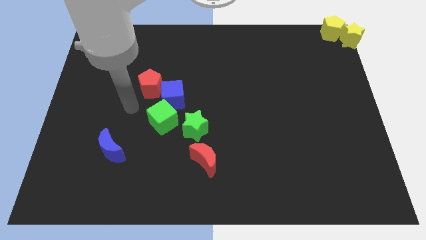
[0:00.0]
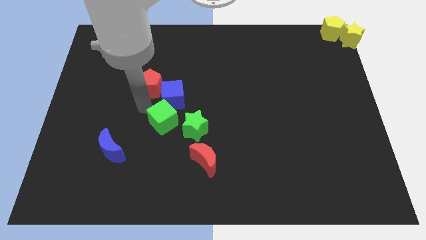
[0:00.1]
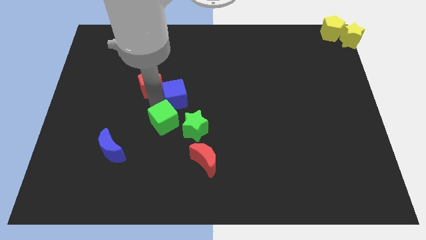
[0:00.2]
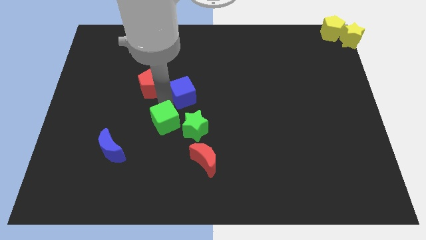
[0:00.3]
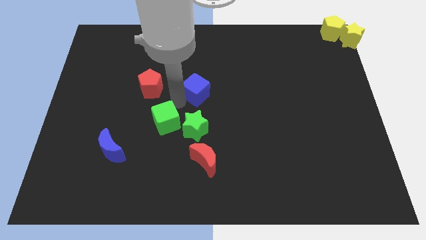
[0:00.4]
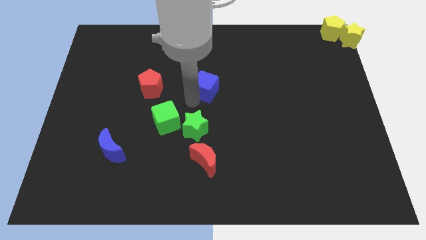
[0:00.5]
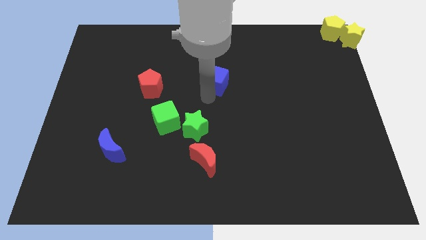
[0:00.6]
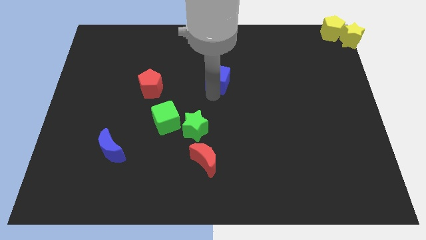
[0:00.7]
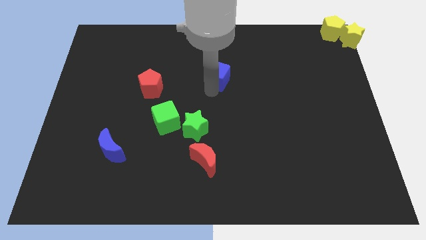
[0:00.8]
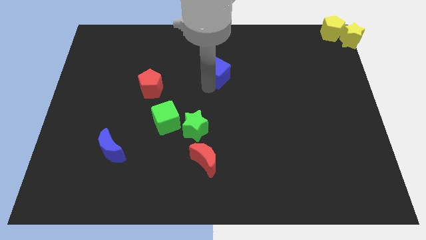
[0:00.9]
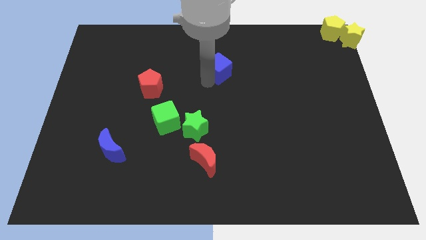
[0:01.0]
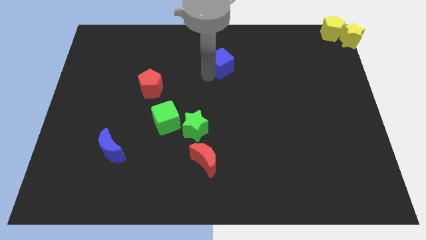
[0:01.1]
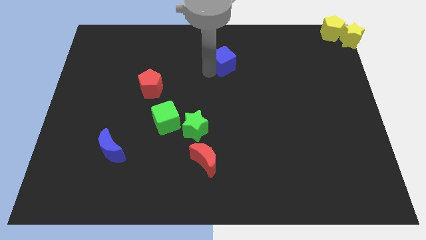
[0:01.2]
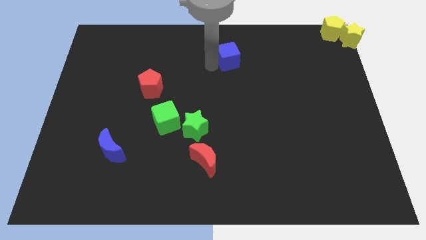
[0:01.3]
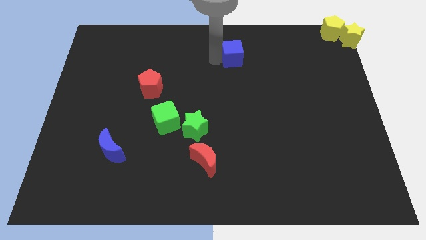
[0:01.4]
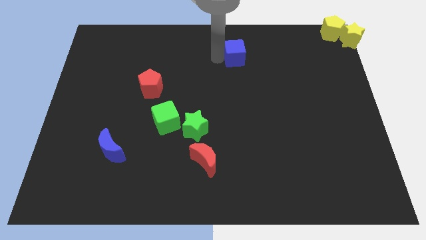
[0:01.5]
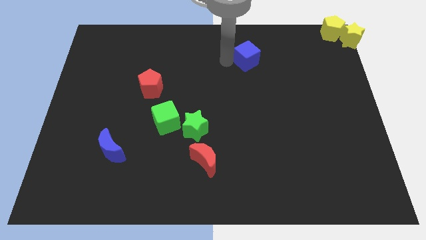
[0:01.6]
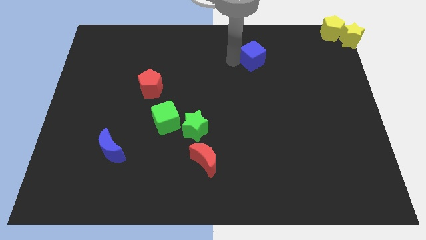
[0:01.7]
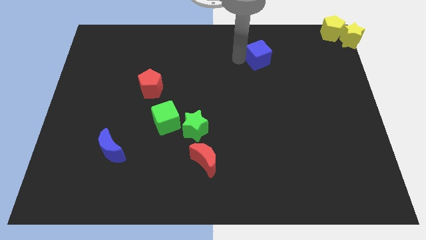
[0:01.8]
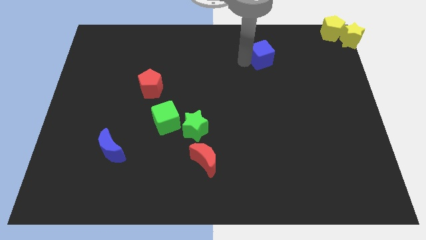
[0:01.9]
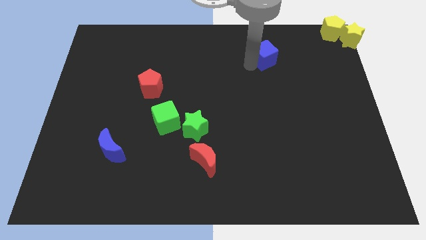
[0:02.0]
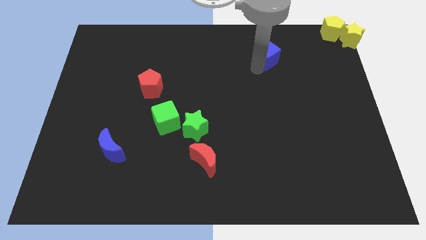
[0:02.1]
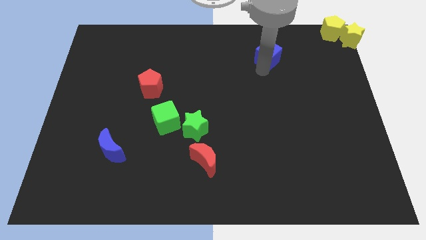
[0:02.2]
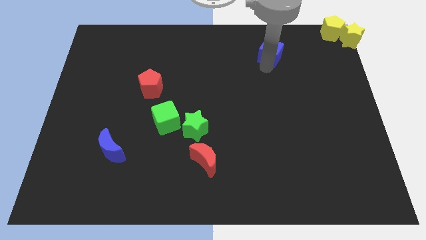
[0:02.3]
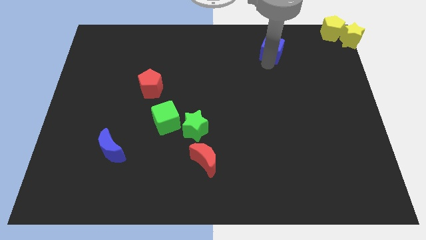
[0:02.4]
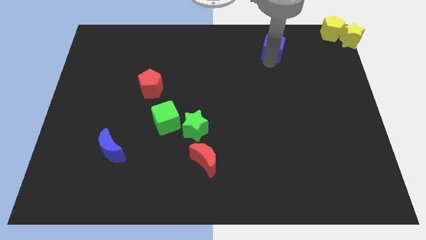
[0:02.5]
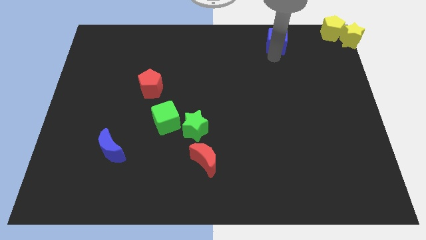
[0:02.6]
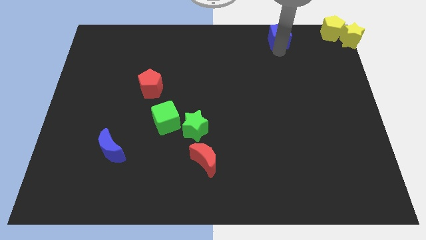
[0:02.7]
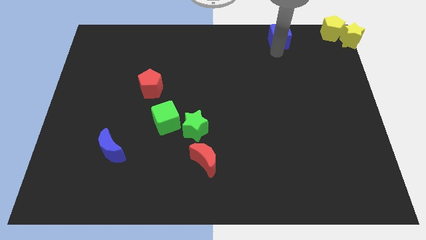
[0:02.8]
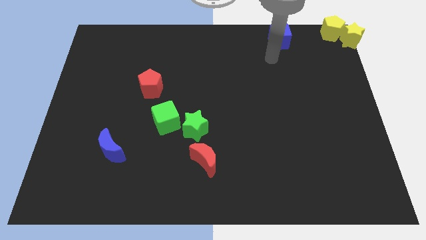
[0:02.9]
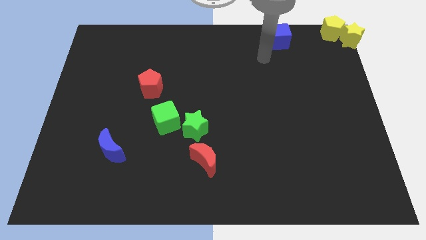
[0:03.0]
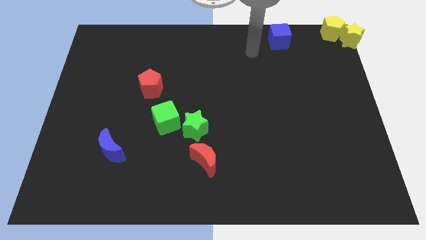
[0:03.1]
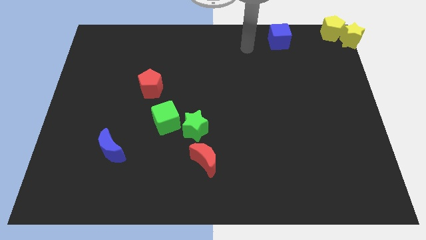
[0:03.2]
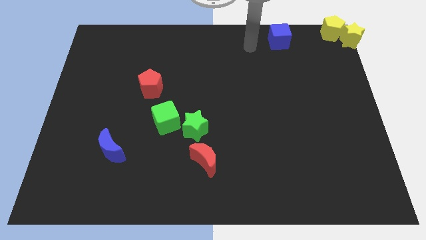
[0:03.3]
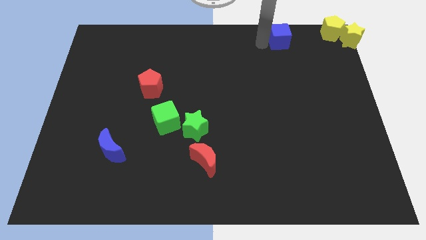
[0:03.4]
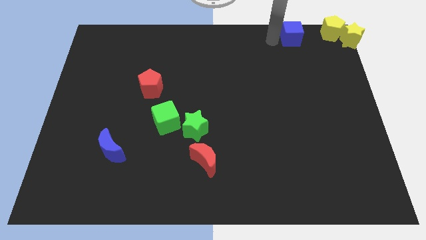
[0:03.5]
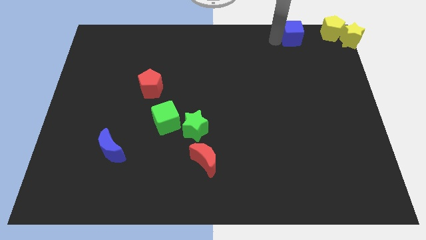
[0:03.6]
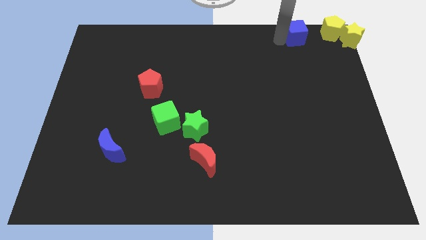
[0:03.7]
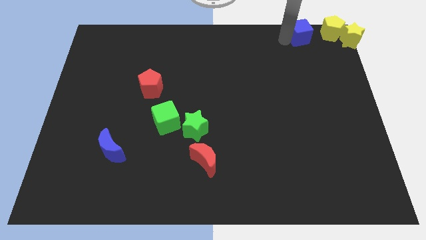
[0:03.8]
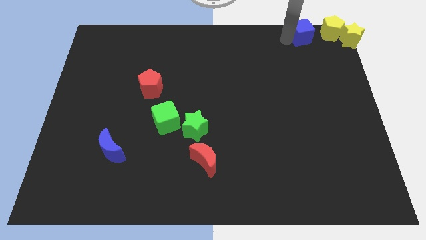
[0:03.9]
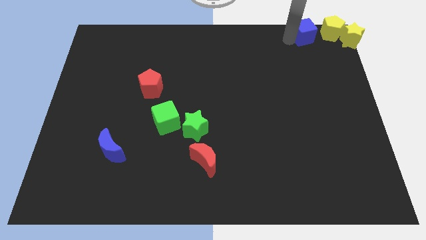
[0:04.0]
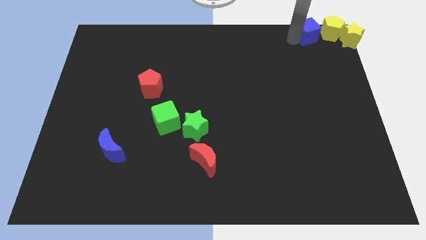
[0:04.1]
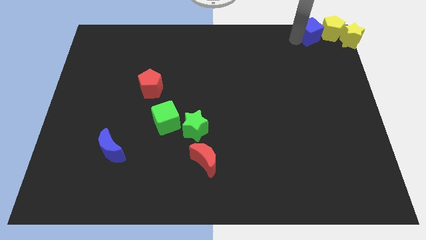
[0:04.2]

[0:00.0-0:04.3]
push the blue cube towards the left side of the yellow pentagon

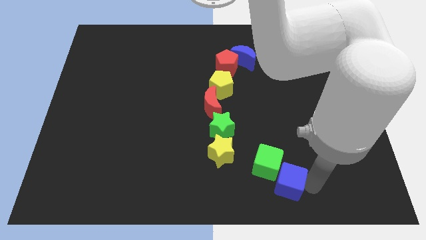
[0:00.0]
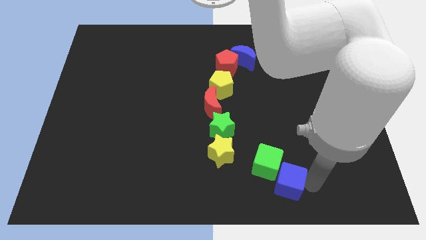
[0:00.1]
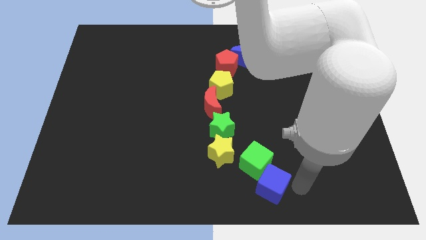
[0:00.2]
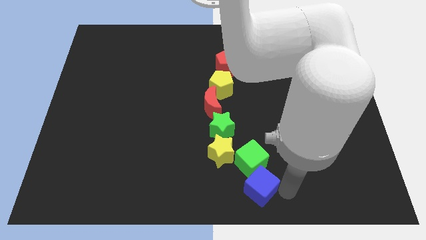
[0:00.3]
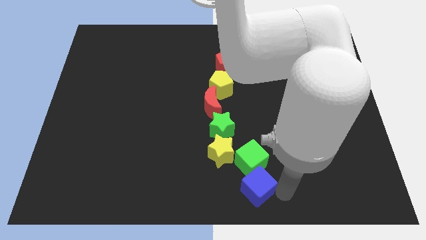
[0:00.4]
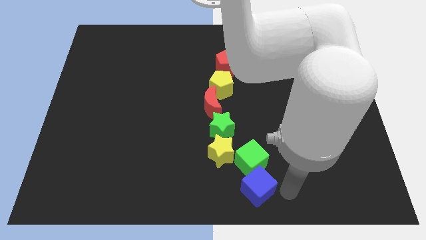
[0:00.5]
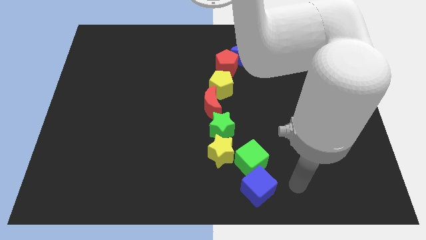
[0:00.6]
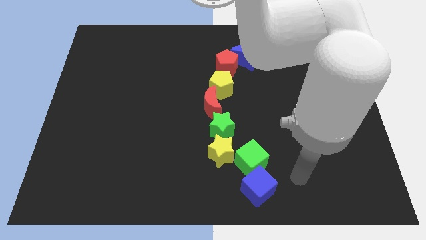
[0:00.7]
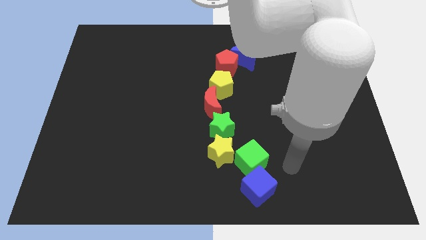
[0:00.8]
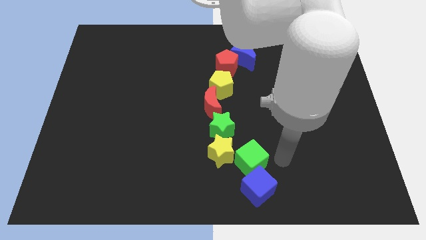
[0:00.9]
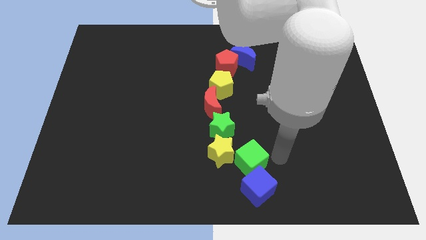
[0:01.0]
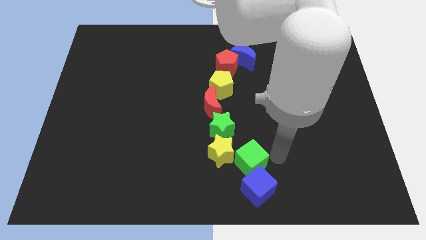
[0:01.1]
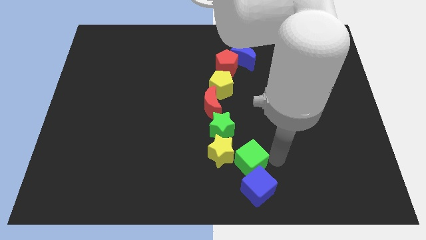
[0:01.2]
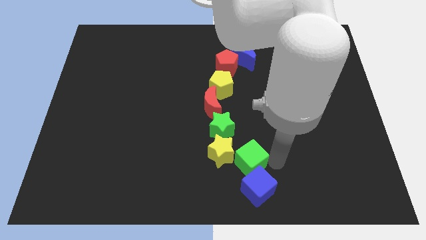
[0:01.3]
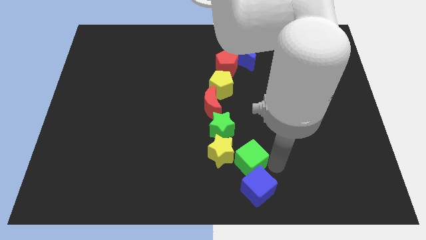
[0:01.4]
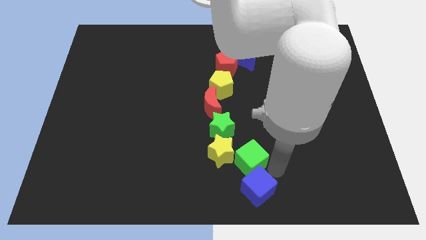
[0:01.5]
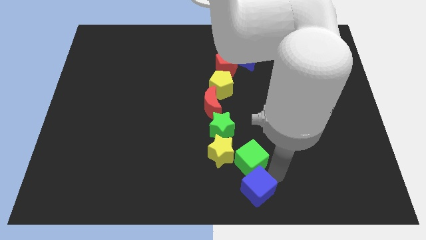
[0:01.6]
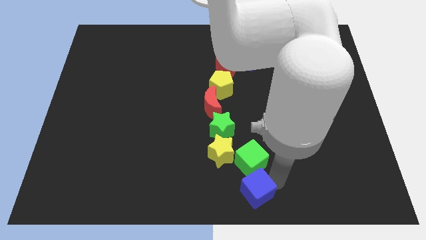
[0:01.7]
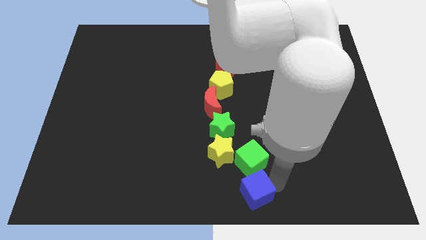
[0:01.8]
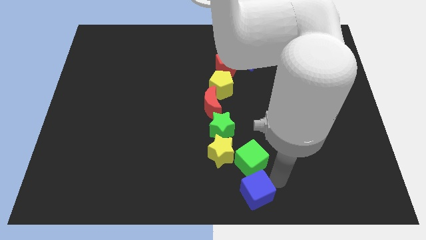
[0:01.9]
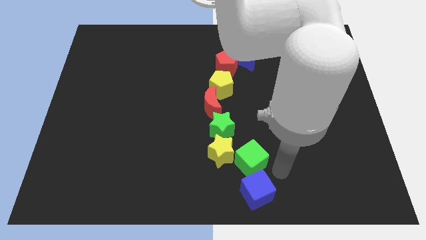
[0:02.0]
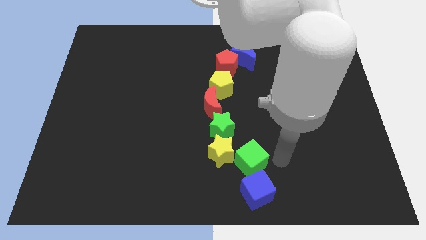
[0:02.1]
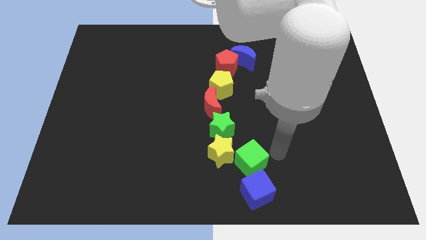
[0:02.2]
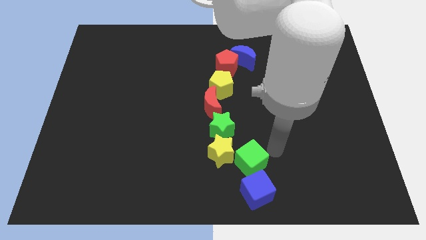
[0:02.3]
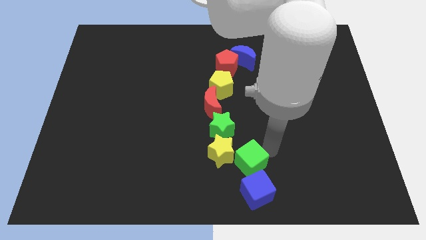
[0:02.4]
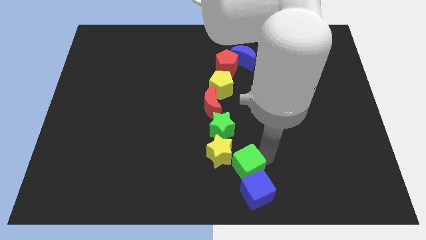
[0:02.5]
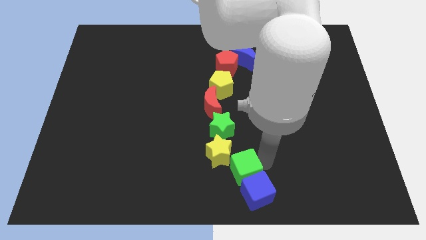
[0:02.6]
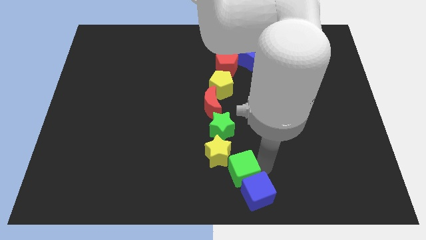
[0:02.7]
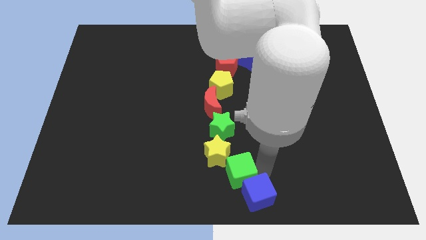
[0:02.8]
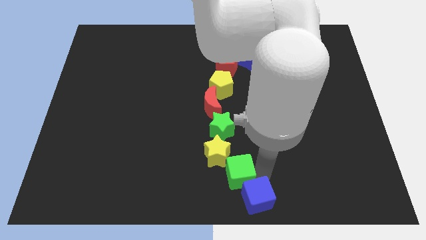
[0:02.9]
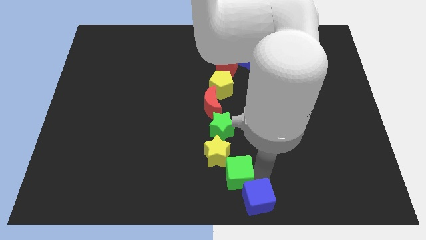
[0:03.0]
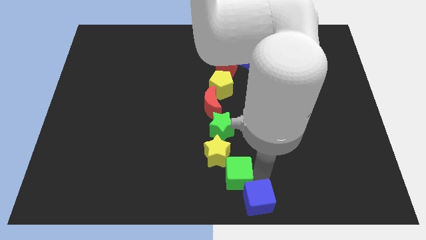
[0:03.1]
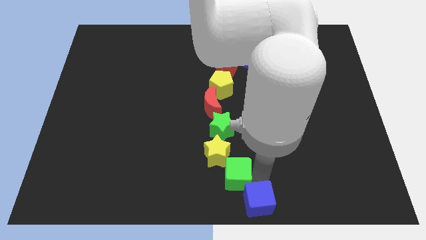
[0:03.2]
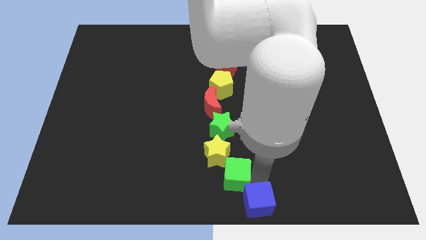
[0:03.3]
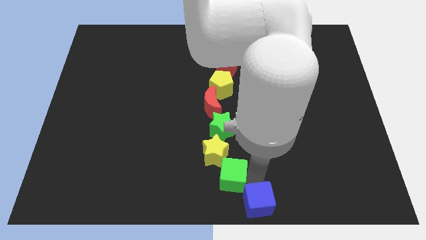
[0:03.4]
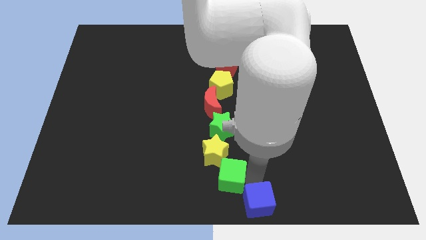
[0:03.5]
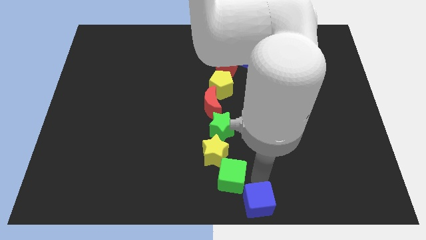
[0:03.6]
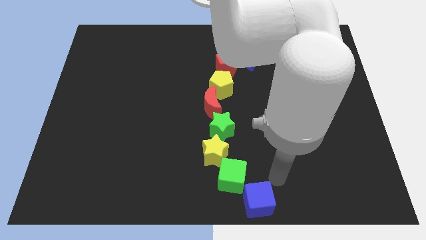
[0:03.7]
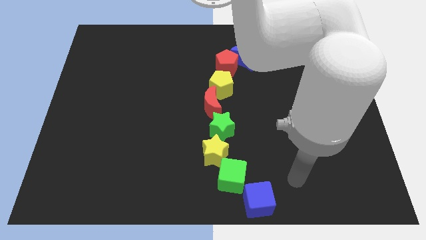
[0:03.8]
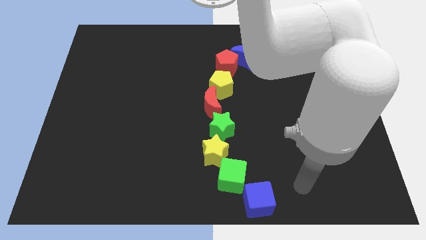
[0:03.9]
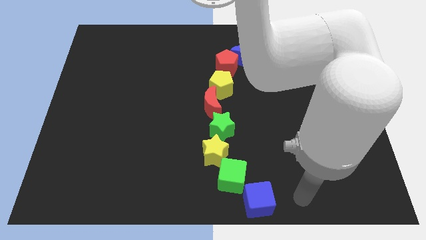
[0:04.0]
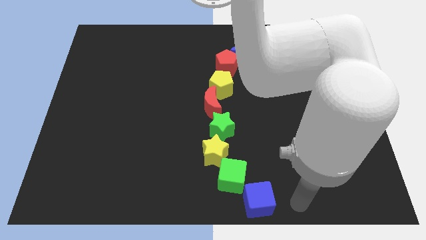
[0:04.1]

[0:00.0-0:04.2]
put the cube at the bottom center of the board

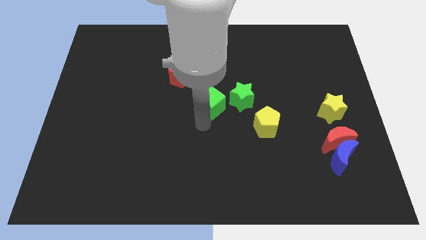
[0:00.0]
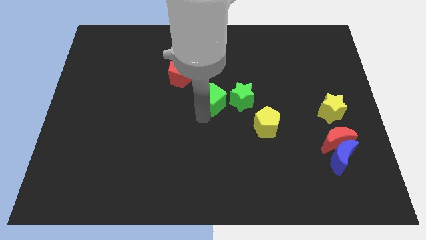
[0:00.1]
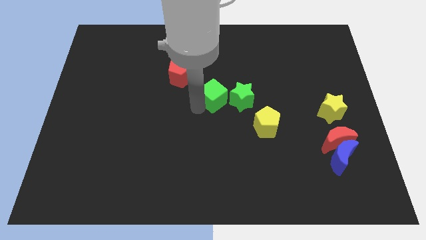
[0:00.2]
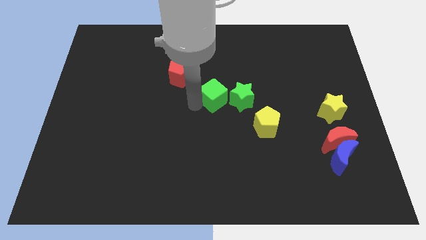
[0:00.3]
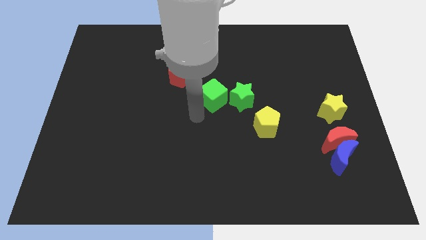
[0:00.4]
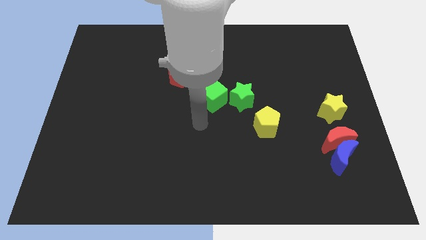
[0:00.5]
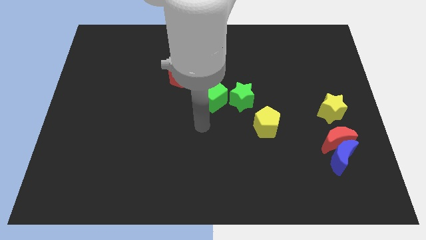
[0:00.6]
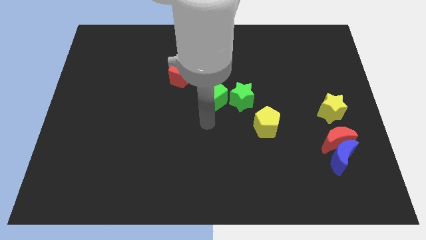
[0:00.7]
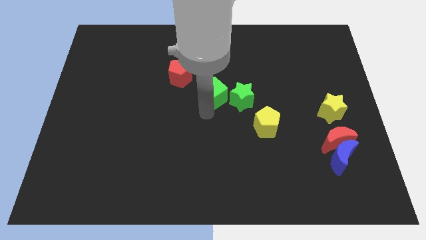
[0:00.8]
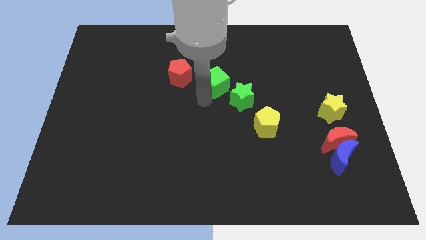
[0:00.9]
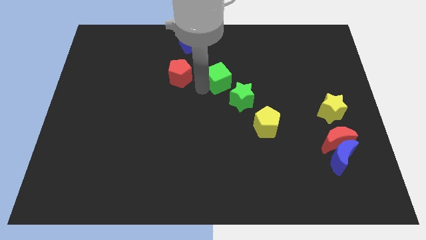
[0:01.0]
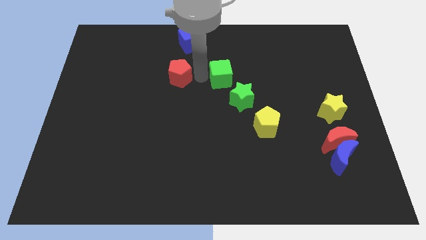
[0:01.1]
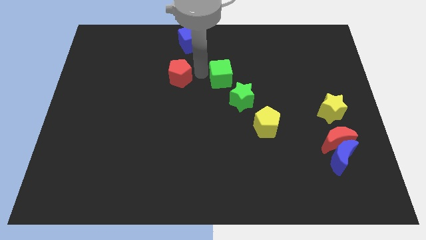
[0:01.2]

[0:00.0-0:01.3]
push the green cube to the right of red pentagon
